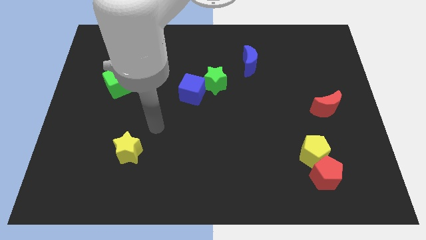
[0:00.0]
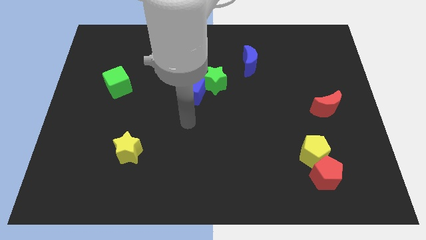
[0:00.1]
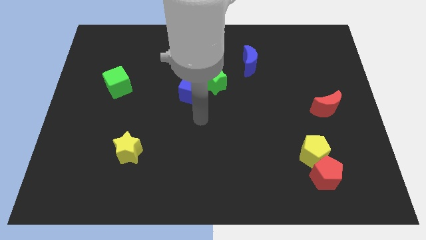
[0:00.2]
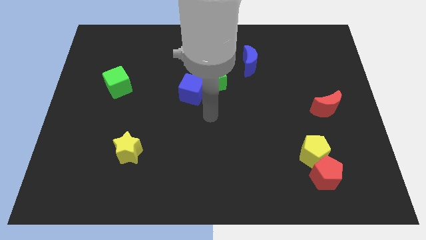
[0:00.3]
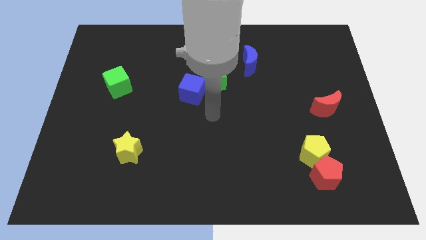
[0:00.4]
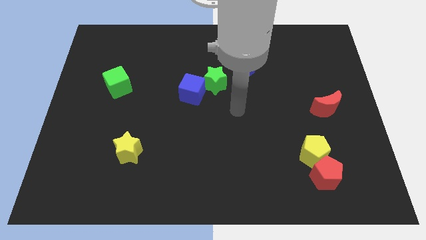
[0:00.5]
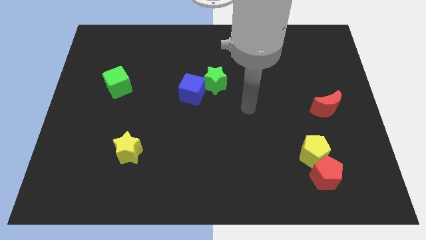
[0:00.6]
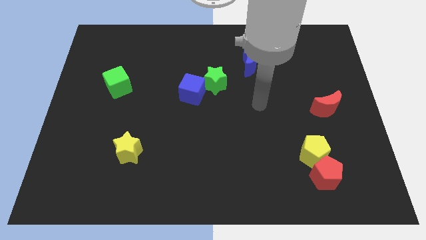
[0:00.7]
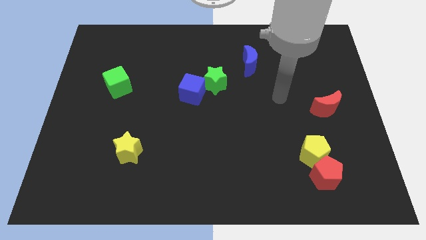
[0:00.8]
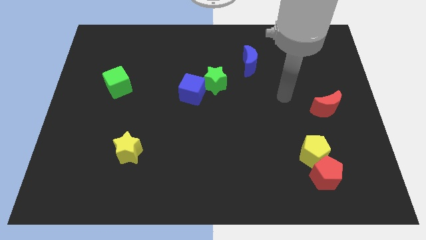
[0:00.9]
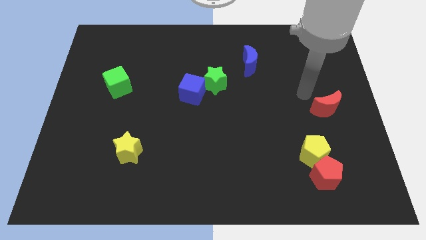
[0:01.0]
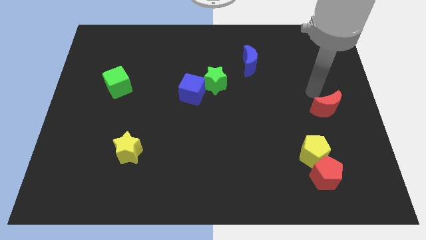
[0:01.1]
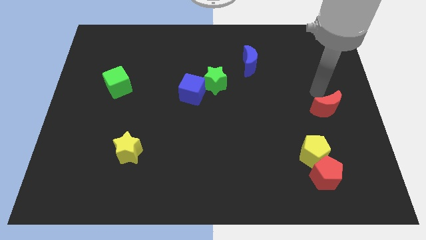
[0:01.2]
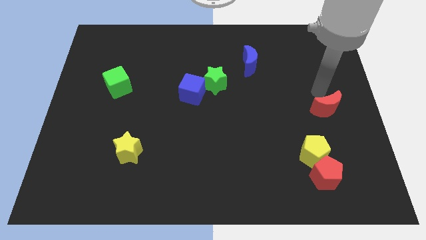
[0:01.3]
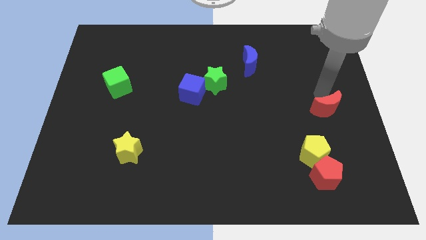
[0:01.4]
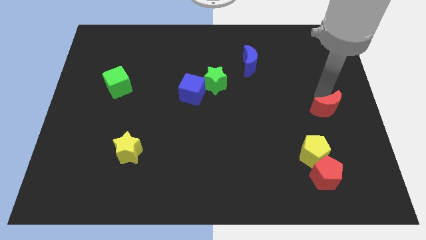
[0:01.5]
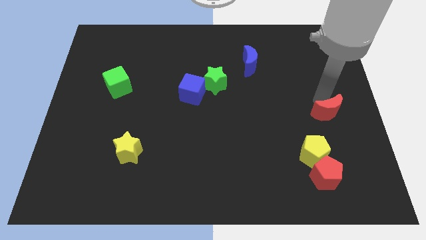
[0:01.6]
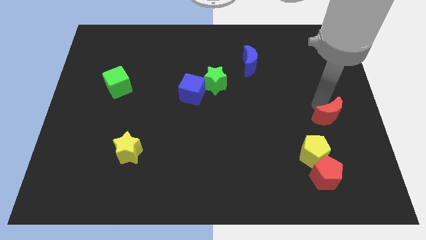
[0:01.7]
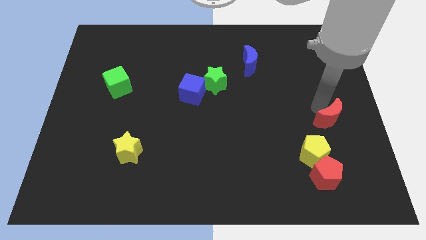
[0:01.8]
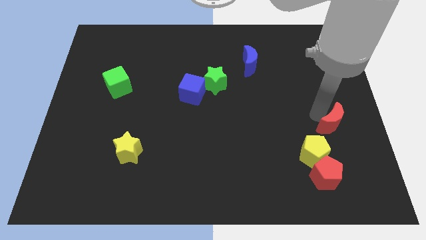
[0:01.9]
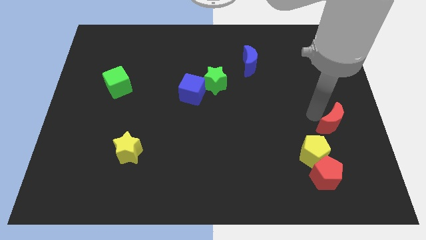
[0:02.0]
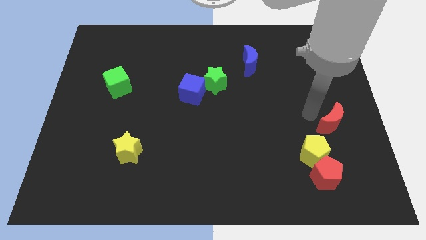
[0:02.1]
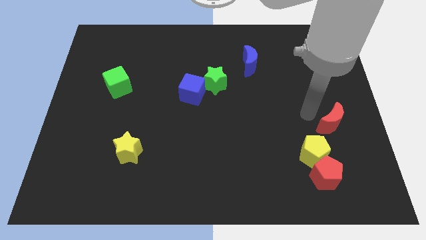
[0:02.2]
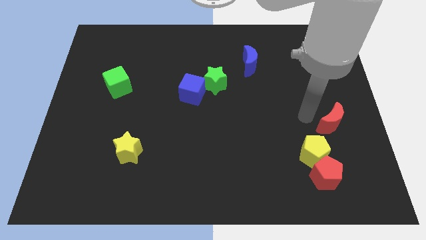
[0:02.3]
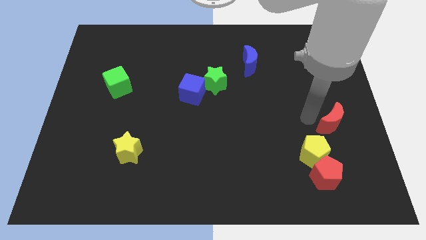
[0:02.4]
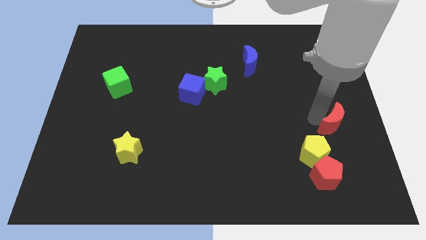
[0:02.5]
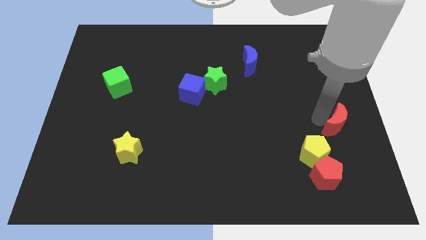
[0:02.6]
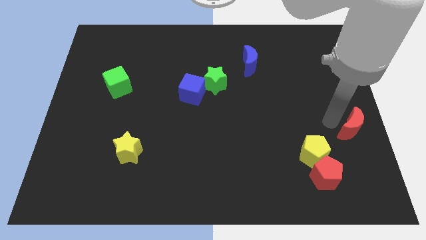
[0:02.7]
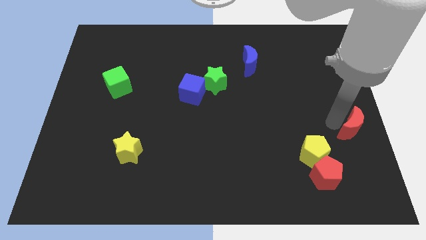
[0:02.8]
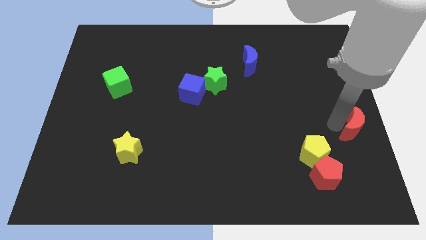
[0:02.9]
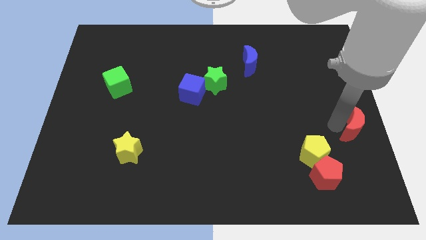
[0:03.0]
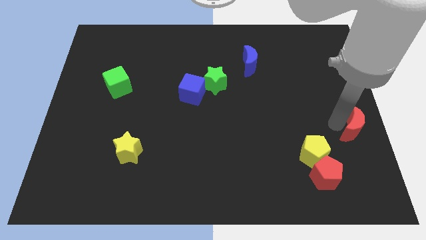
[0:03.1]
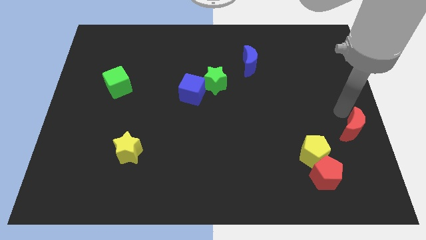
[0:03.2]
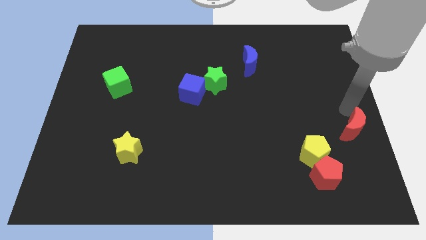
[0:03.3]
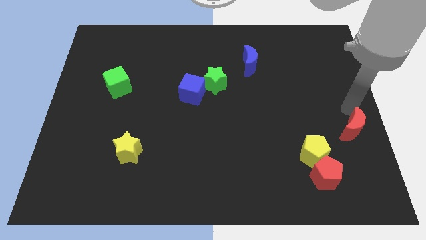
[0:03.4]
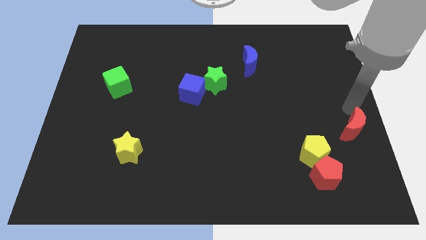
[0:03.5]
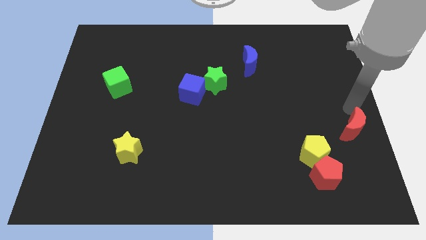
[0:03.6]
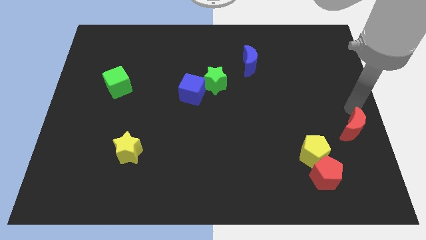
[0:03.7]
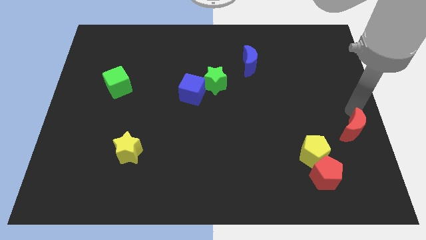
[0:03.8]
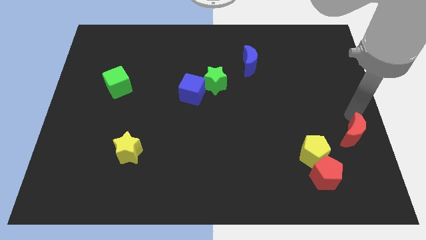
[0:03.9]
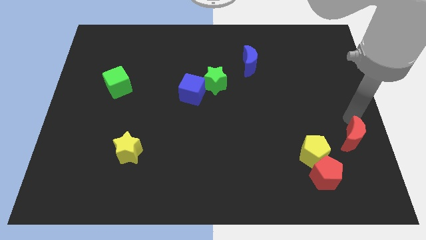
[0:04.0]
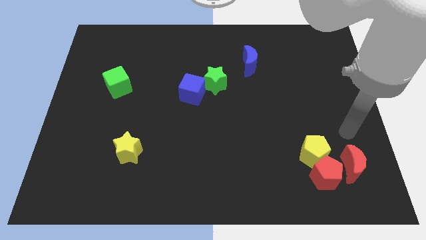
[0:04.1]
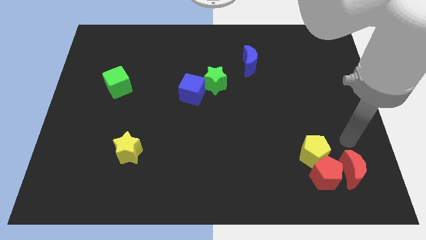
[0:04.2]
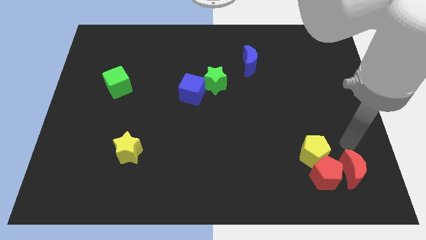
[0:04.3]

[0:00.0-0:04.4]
put the red moon close to the red pentagon

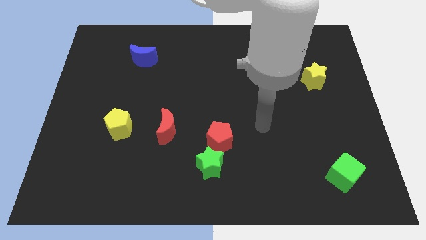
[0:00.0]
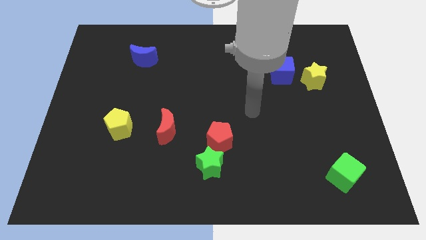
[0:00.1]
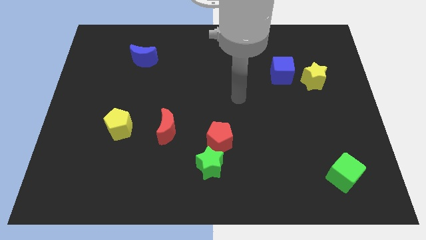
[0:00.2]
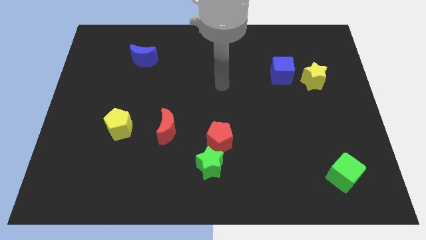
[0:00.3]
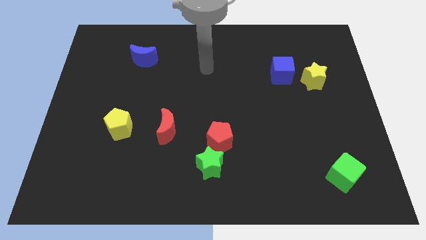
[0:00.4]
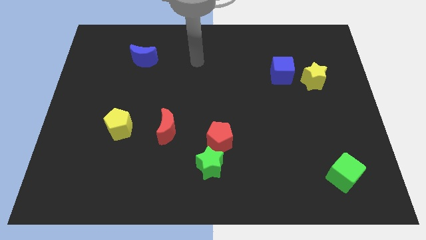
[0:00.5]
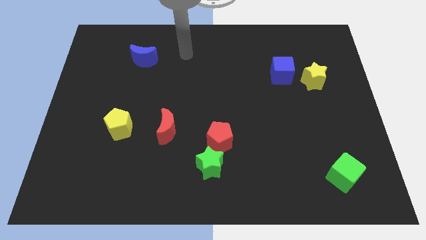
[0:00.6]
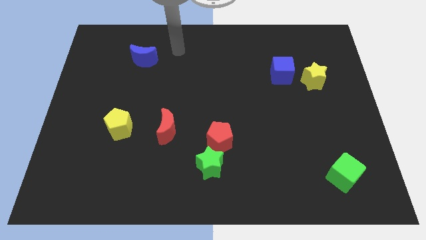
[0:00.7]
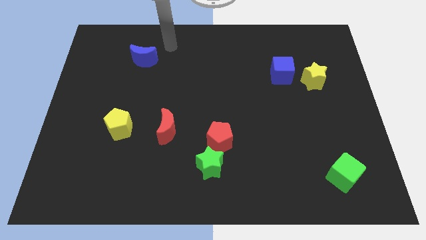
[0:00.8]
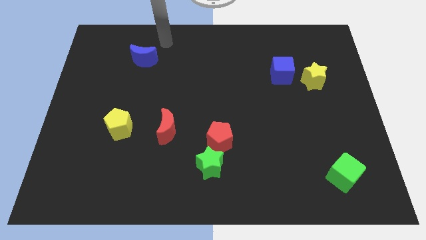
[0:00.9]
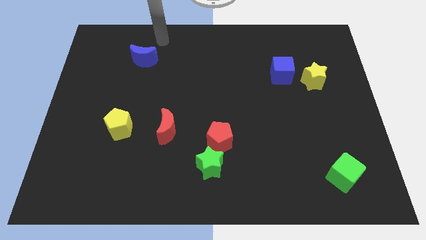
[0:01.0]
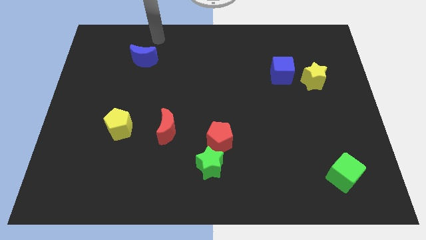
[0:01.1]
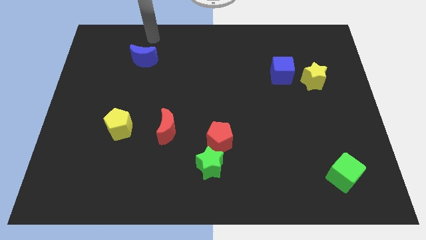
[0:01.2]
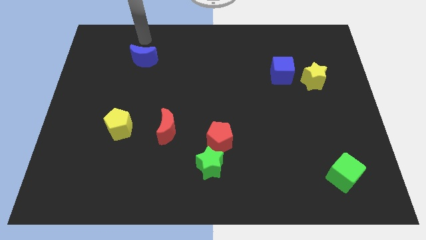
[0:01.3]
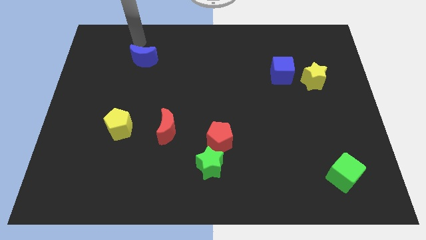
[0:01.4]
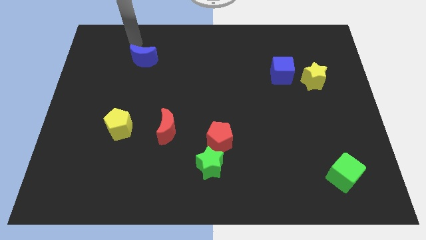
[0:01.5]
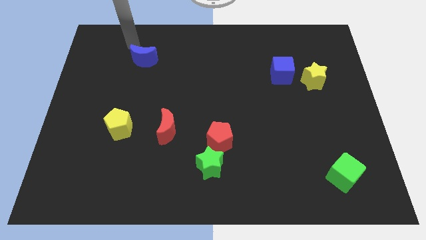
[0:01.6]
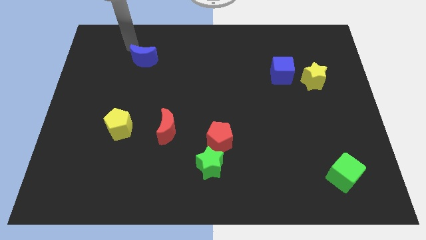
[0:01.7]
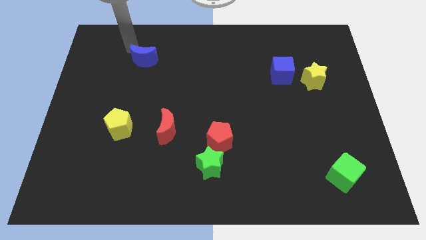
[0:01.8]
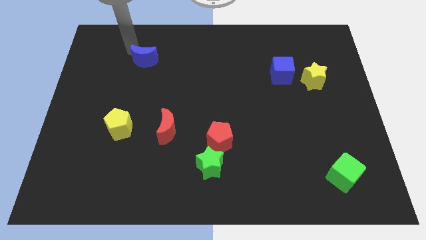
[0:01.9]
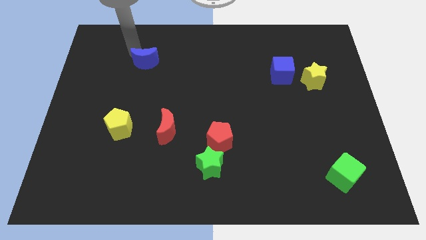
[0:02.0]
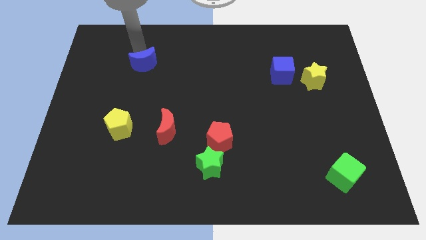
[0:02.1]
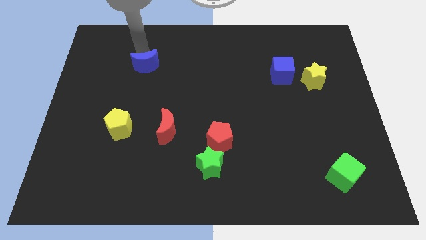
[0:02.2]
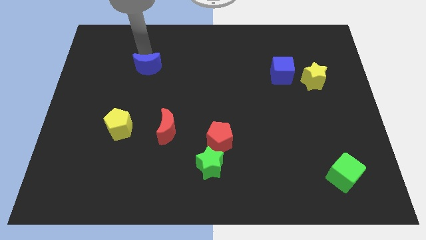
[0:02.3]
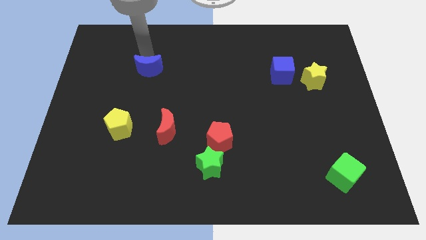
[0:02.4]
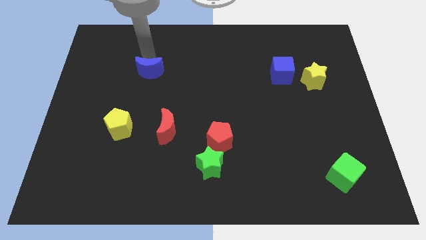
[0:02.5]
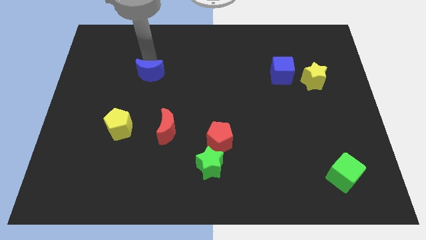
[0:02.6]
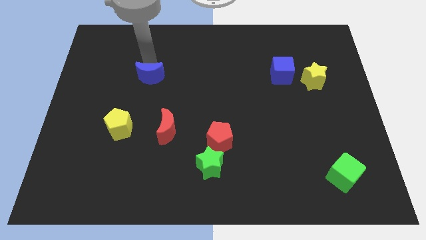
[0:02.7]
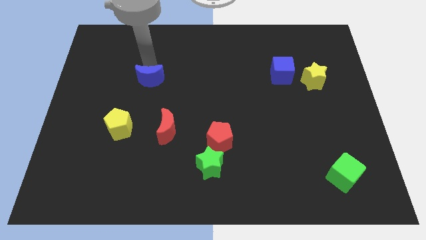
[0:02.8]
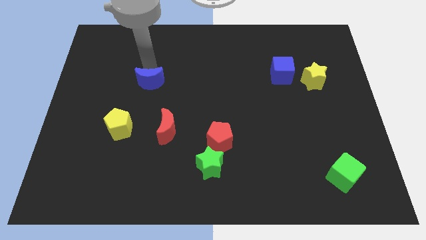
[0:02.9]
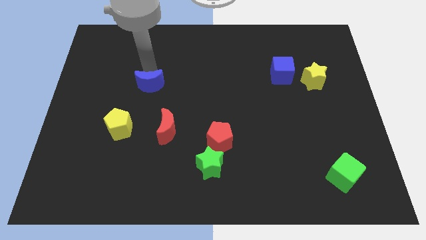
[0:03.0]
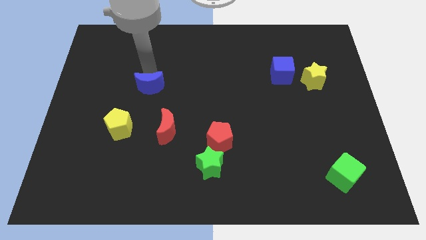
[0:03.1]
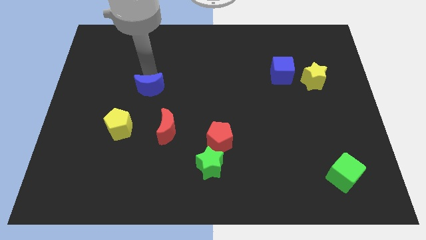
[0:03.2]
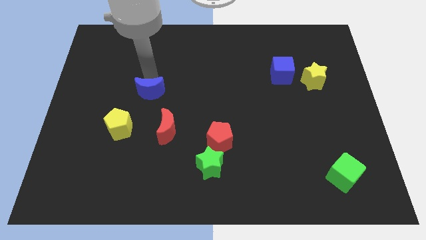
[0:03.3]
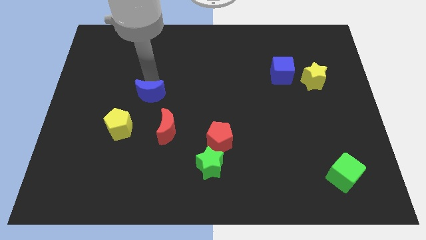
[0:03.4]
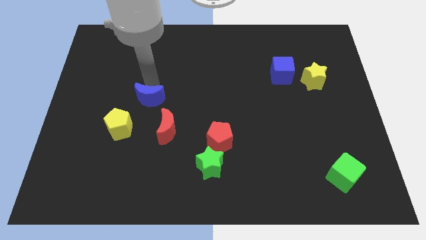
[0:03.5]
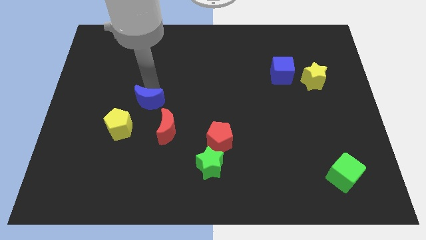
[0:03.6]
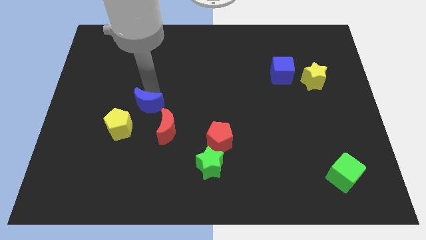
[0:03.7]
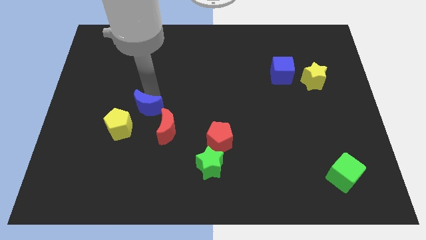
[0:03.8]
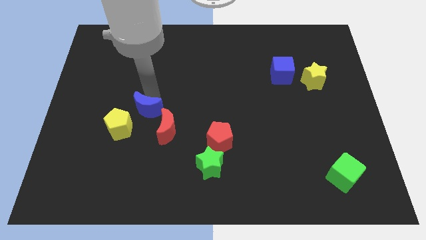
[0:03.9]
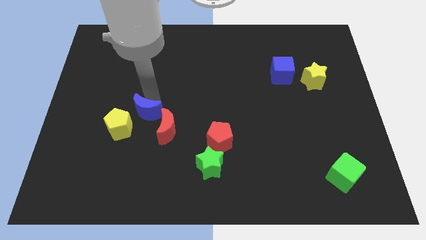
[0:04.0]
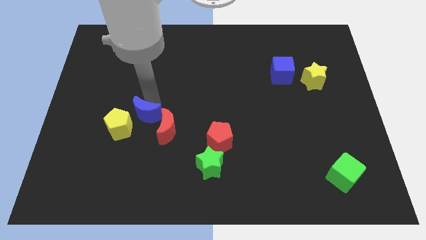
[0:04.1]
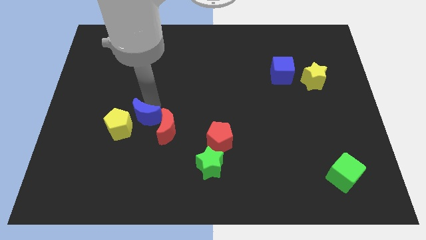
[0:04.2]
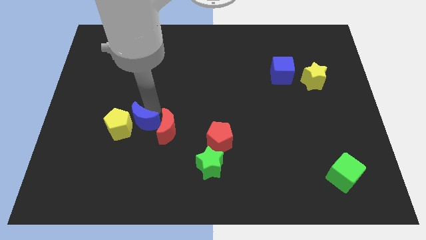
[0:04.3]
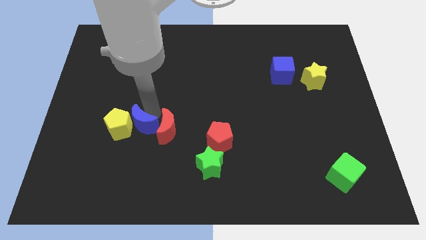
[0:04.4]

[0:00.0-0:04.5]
move the blue moon towards the red moon
